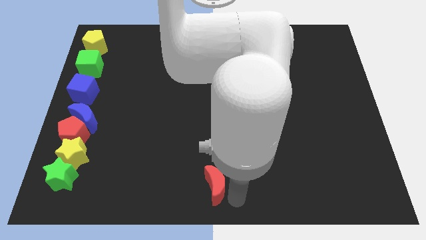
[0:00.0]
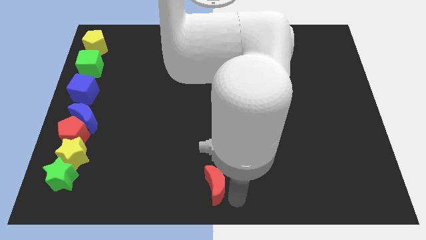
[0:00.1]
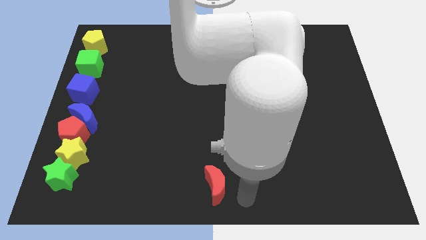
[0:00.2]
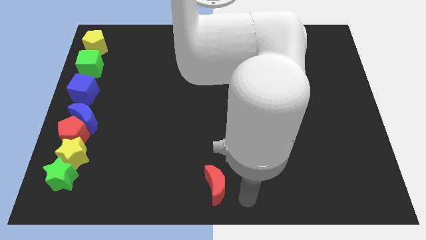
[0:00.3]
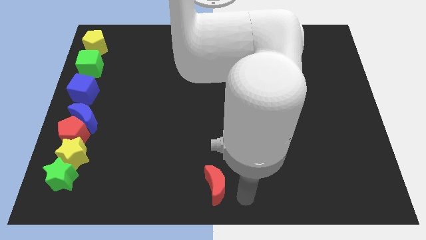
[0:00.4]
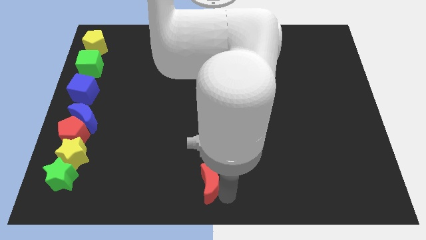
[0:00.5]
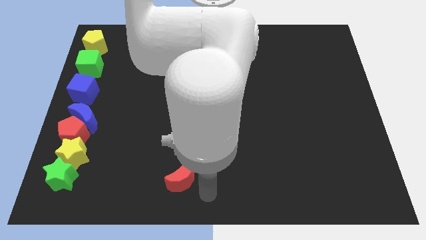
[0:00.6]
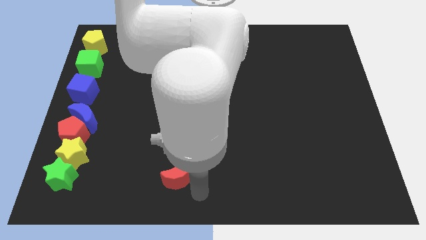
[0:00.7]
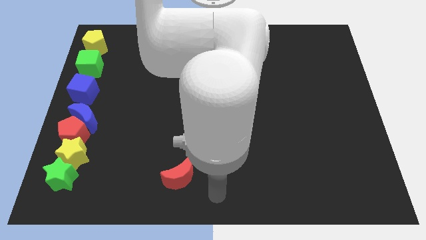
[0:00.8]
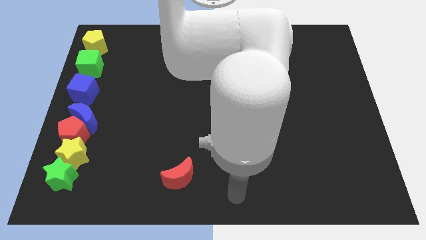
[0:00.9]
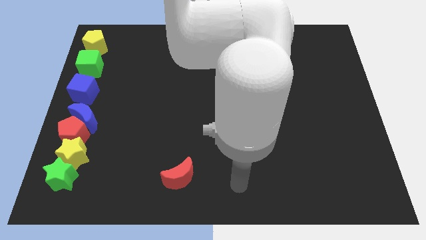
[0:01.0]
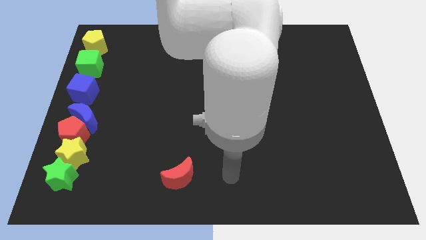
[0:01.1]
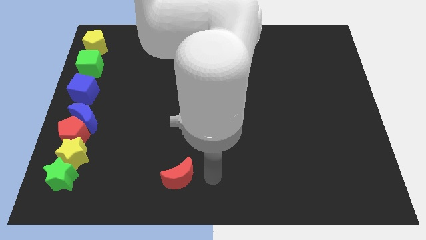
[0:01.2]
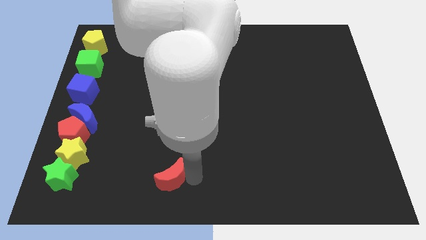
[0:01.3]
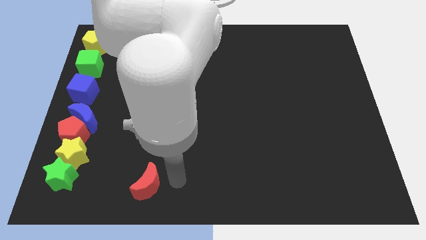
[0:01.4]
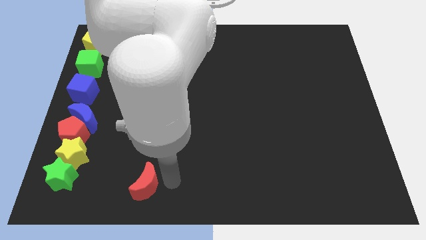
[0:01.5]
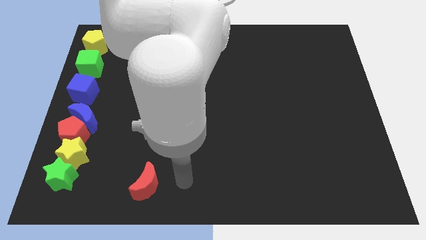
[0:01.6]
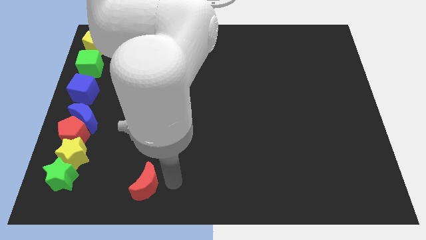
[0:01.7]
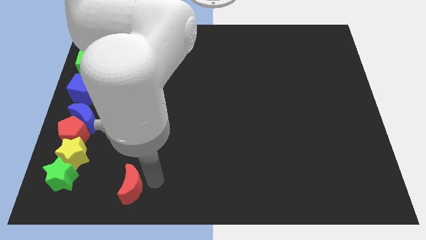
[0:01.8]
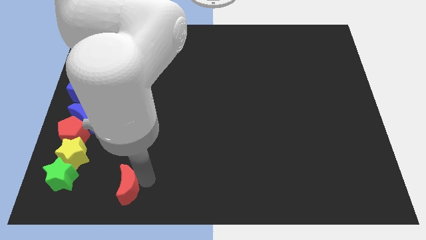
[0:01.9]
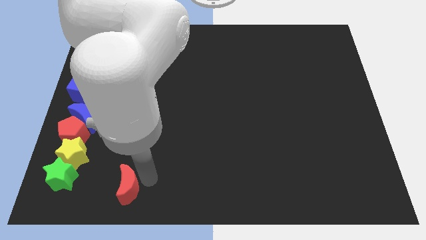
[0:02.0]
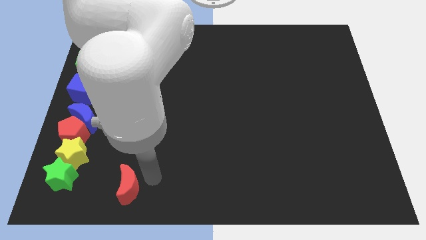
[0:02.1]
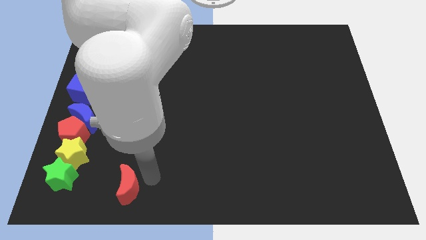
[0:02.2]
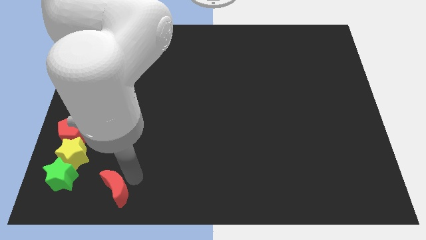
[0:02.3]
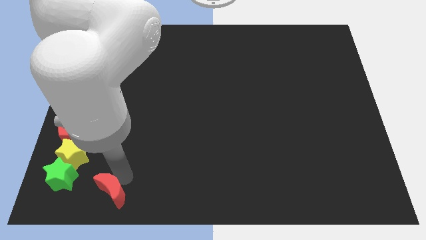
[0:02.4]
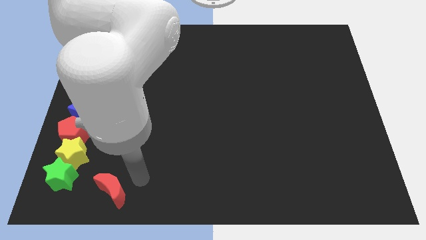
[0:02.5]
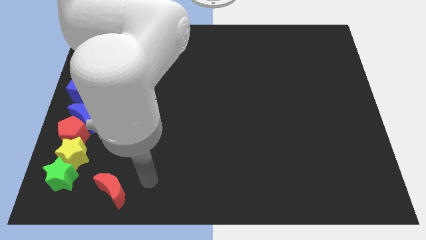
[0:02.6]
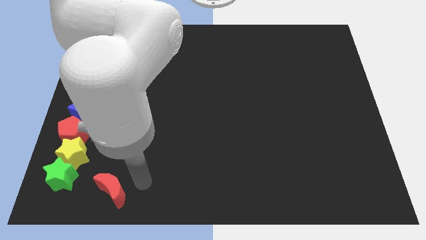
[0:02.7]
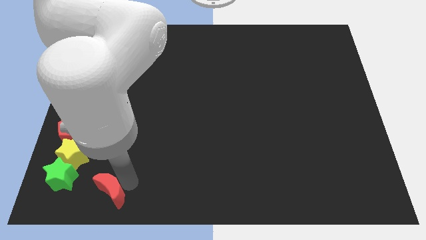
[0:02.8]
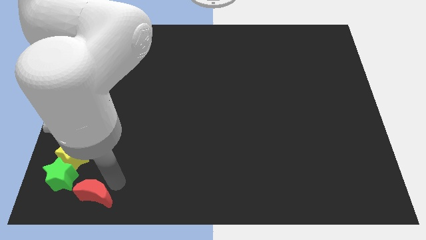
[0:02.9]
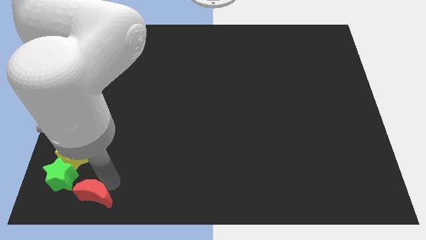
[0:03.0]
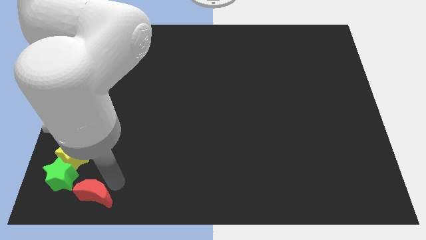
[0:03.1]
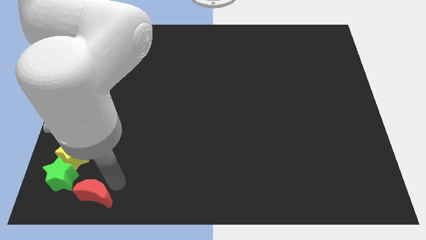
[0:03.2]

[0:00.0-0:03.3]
move the red crescent slightly towards left

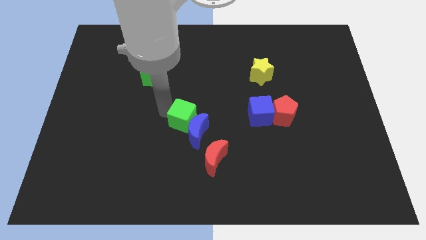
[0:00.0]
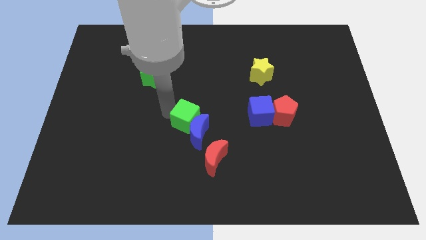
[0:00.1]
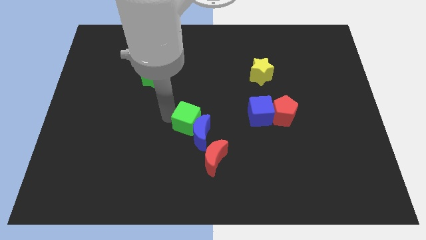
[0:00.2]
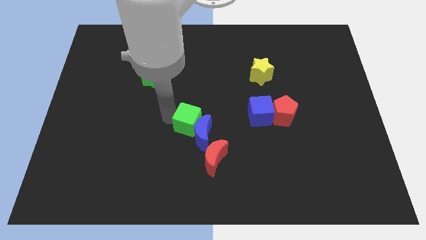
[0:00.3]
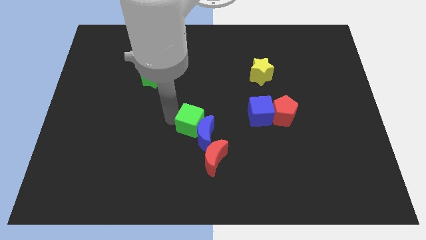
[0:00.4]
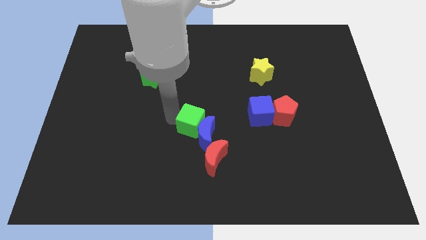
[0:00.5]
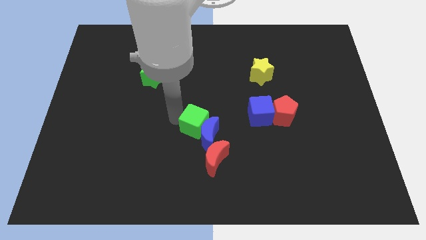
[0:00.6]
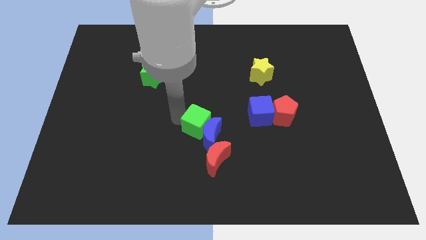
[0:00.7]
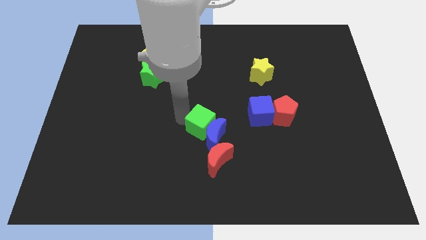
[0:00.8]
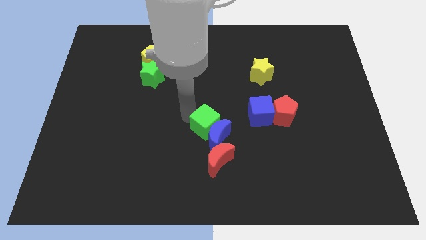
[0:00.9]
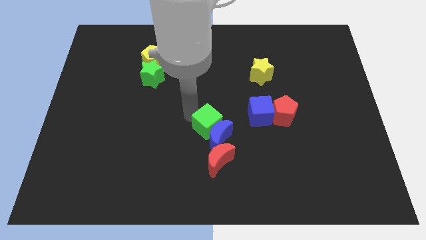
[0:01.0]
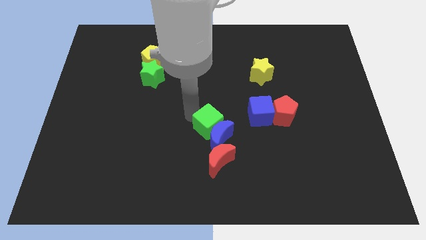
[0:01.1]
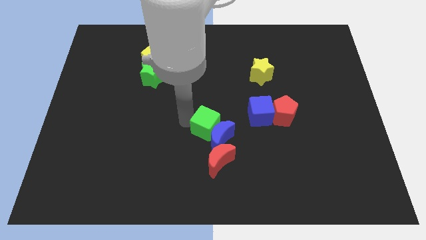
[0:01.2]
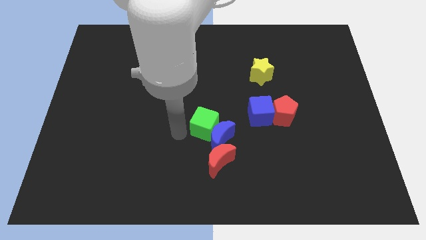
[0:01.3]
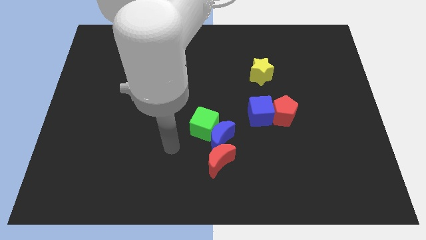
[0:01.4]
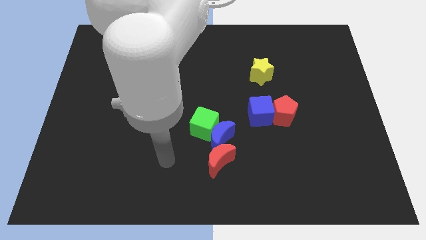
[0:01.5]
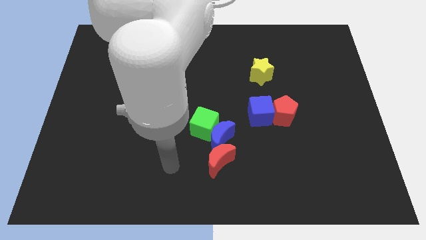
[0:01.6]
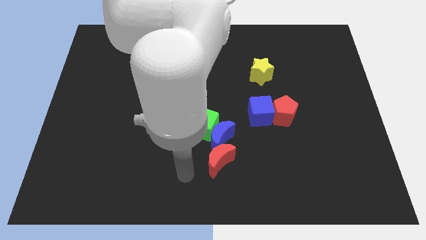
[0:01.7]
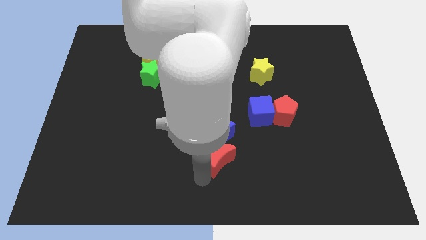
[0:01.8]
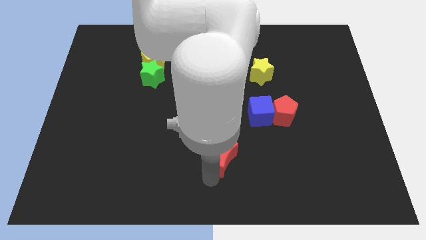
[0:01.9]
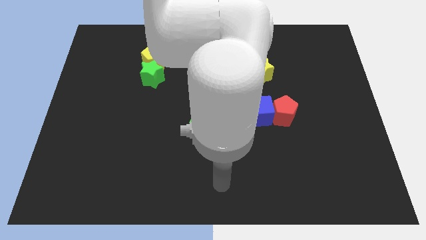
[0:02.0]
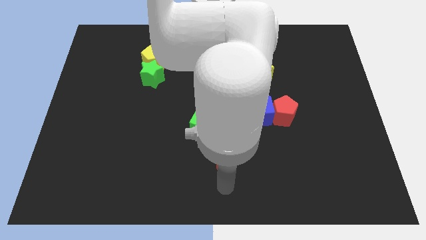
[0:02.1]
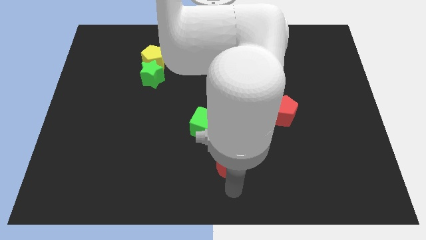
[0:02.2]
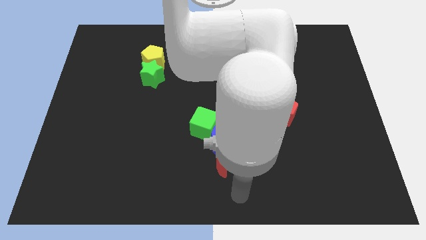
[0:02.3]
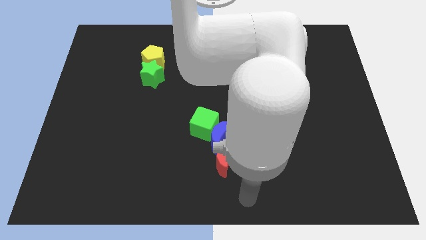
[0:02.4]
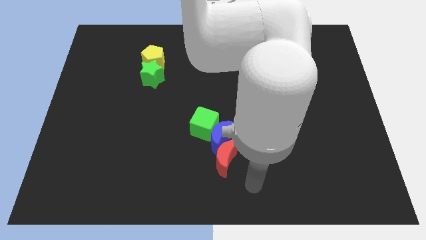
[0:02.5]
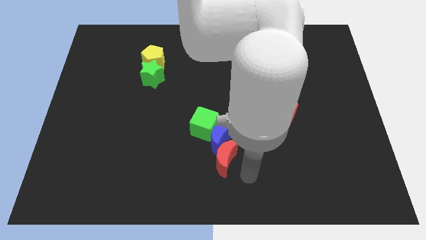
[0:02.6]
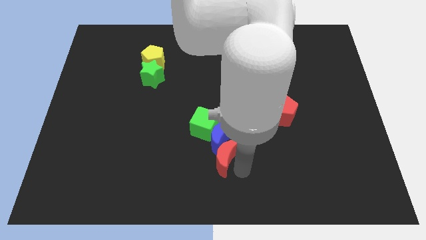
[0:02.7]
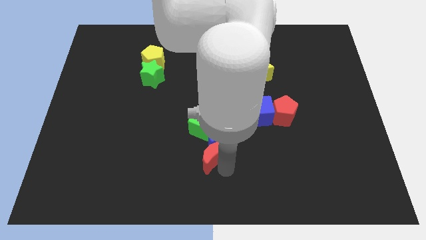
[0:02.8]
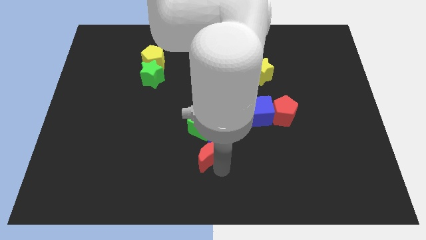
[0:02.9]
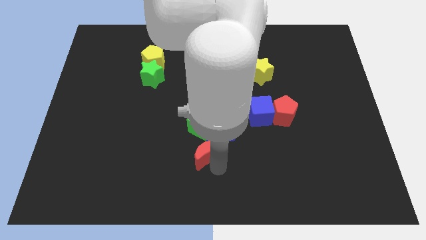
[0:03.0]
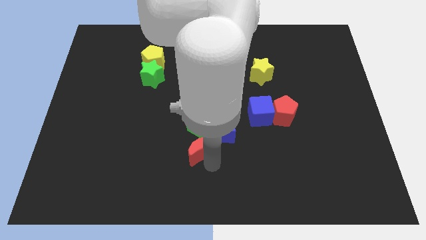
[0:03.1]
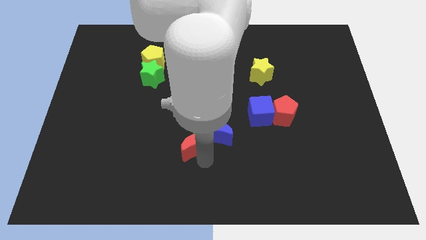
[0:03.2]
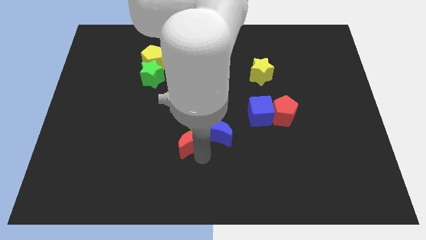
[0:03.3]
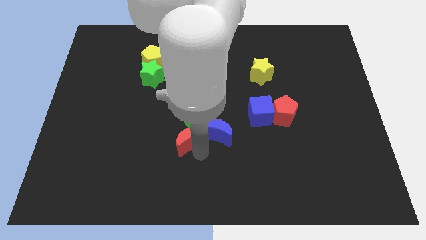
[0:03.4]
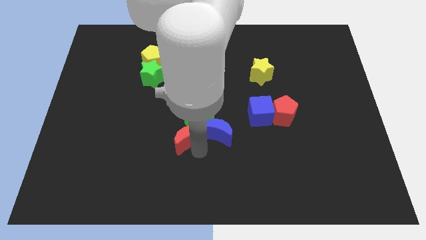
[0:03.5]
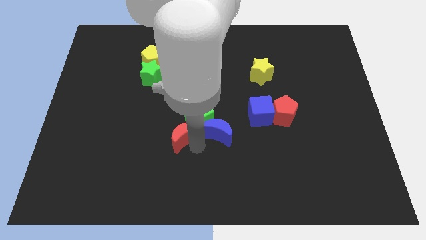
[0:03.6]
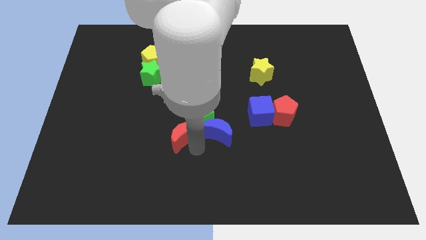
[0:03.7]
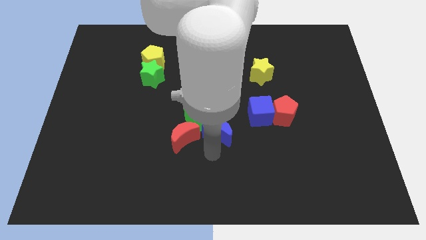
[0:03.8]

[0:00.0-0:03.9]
move red moon near green cube

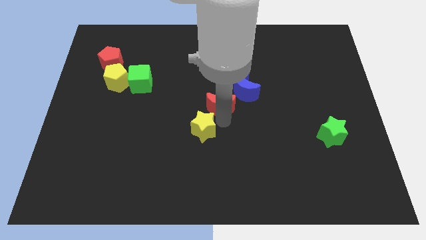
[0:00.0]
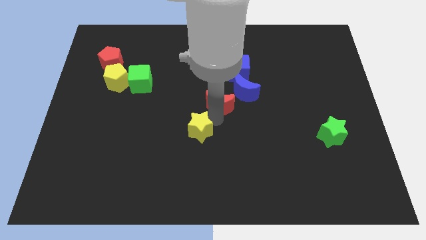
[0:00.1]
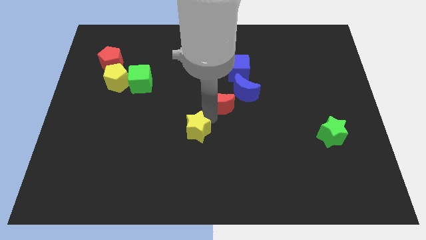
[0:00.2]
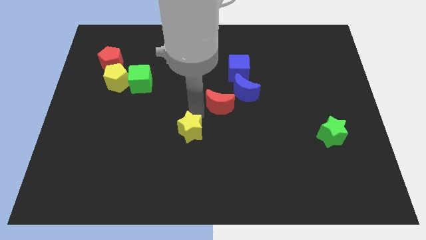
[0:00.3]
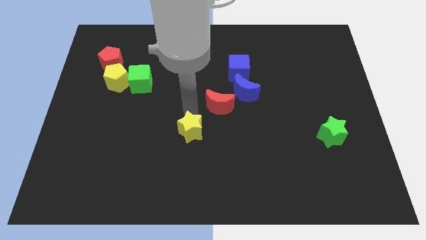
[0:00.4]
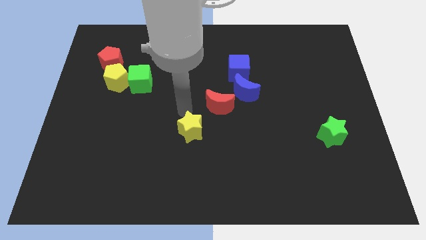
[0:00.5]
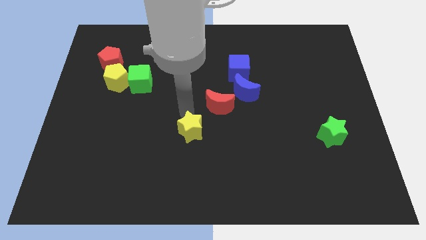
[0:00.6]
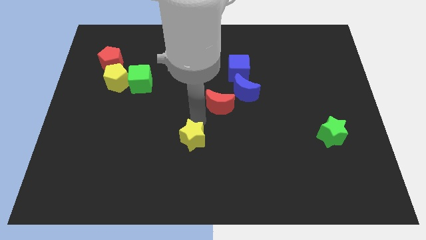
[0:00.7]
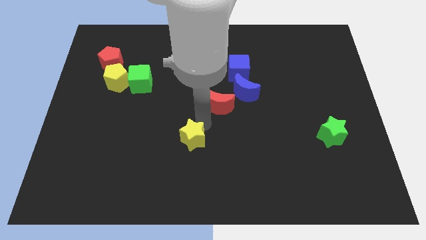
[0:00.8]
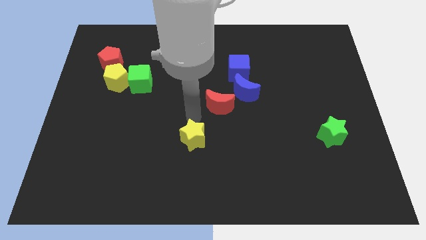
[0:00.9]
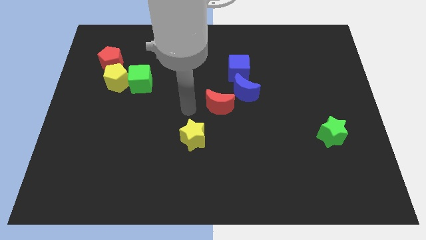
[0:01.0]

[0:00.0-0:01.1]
separate the yellow star and red crescent

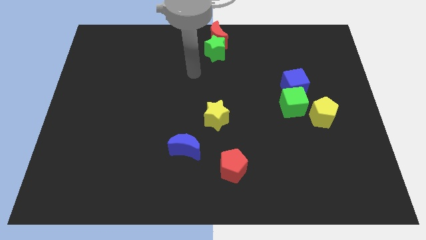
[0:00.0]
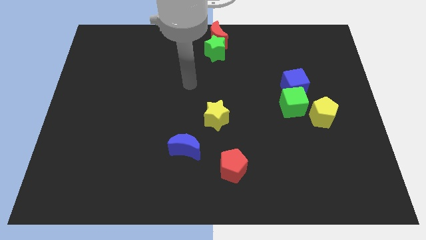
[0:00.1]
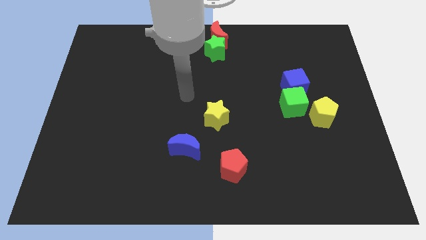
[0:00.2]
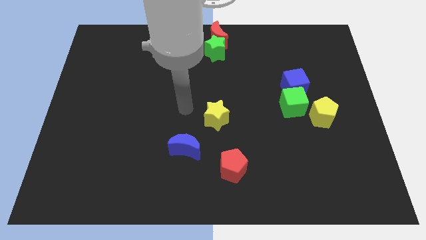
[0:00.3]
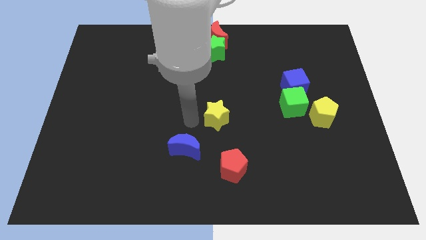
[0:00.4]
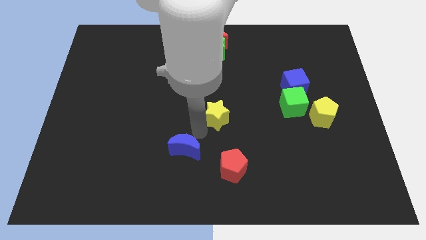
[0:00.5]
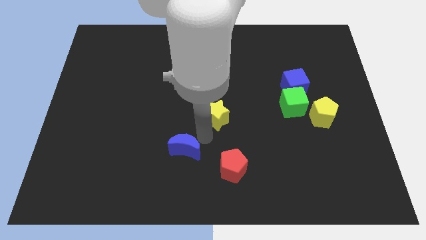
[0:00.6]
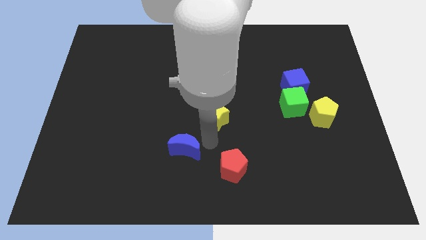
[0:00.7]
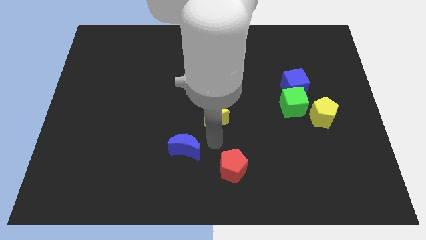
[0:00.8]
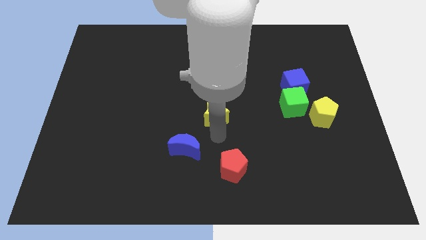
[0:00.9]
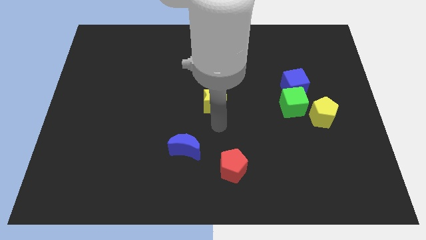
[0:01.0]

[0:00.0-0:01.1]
push yellow star to the center
